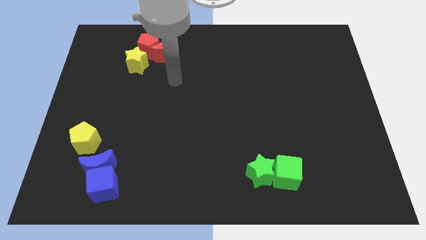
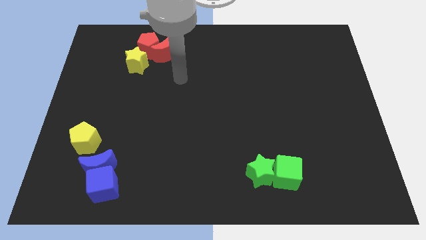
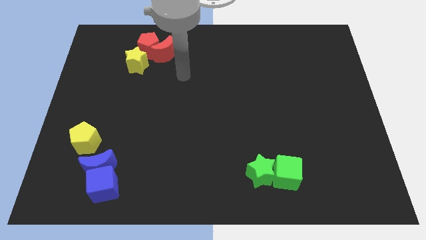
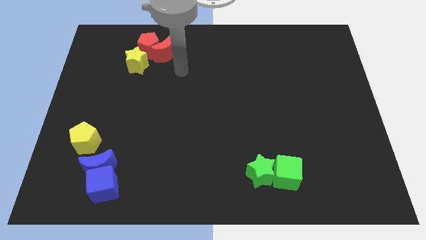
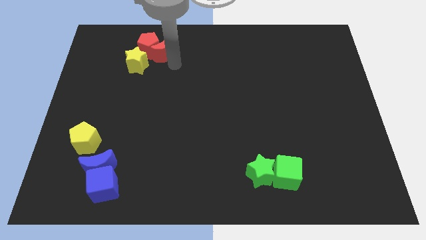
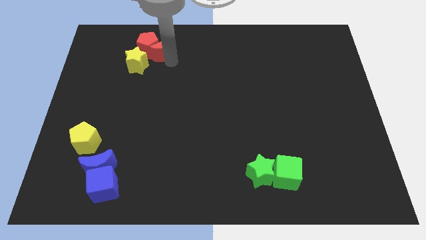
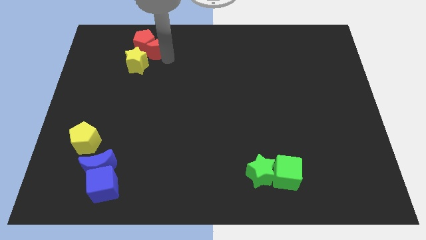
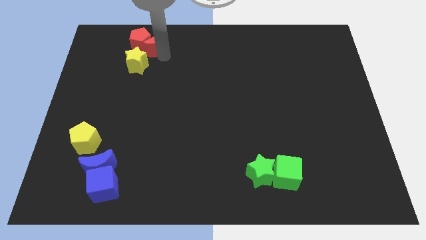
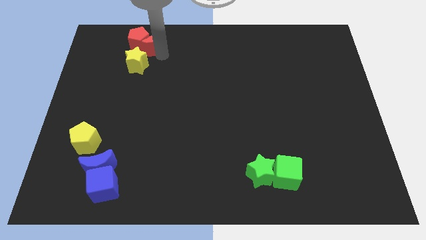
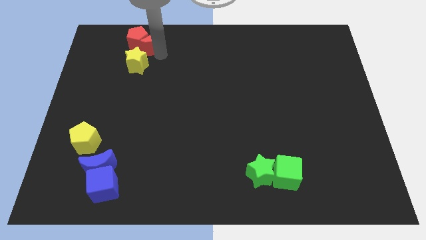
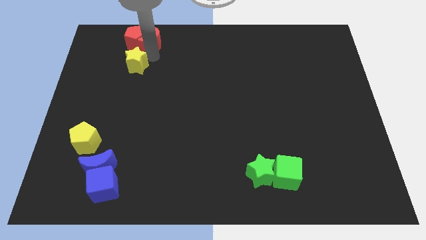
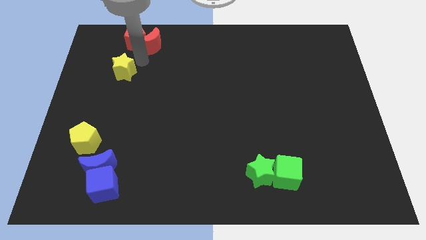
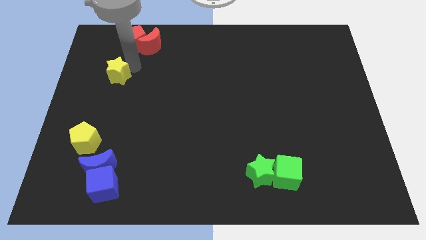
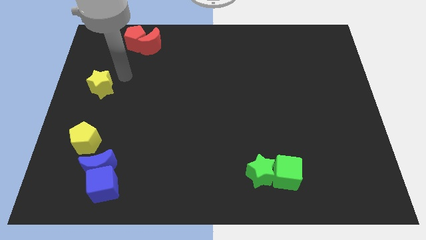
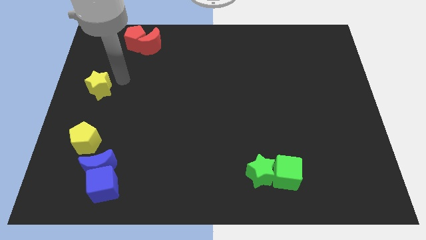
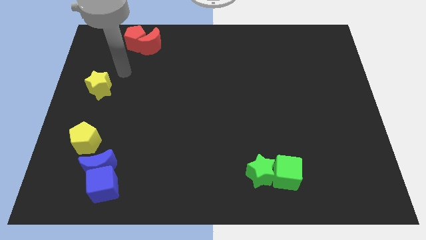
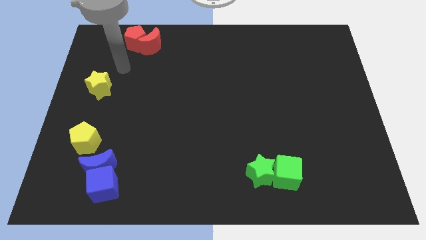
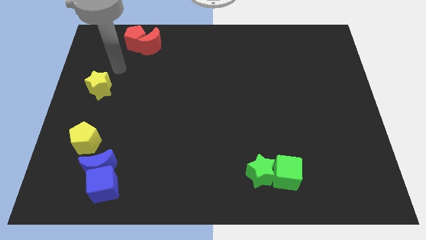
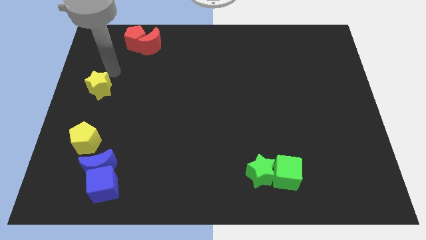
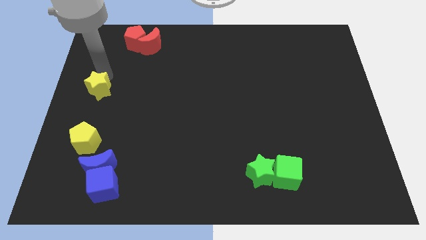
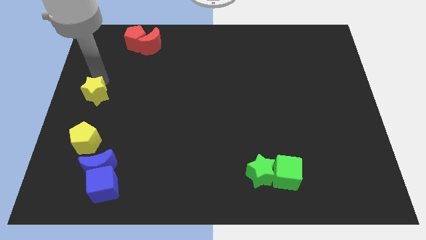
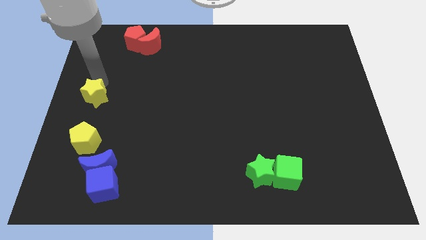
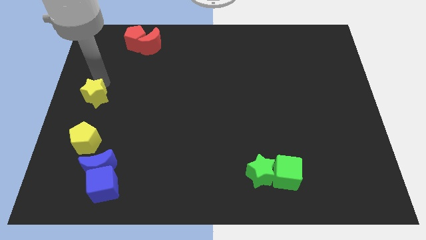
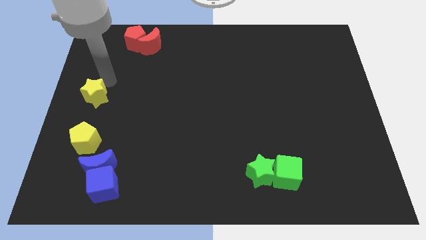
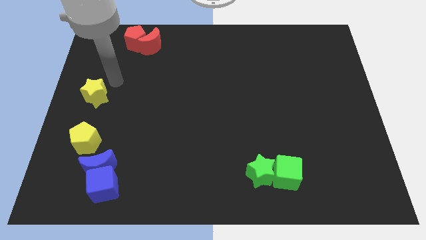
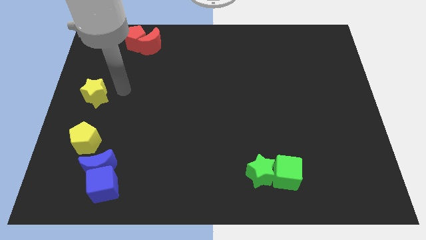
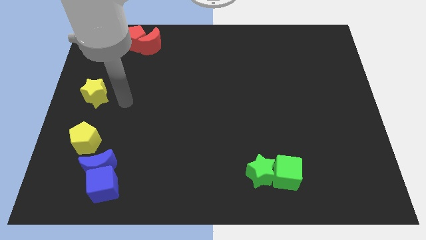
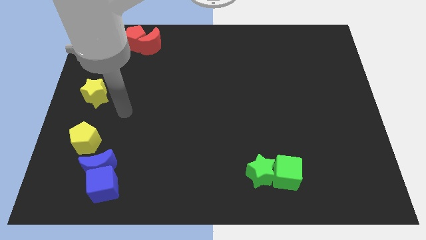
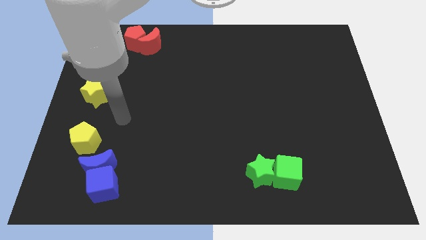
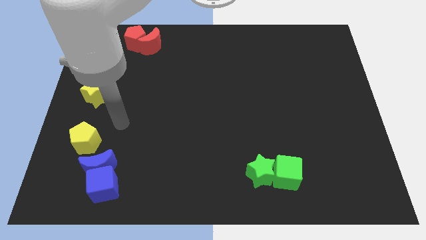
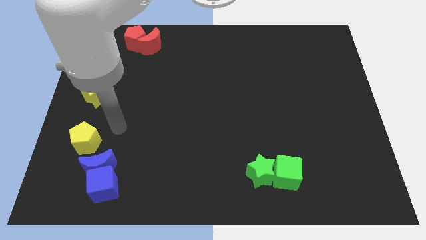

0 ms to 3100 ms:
slide the yellow star towards the left center of board

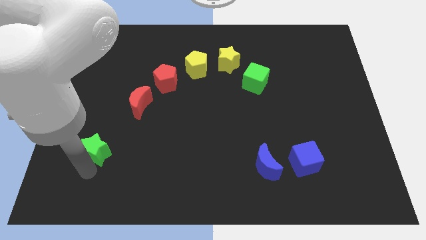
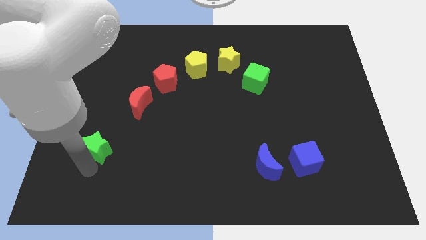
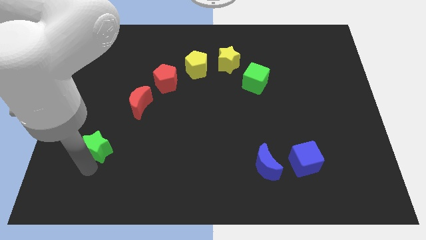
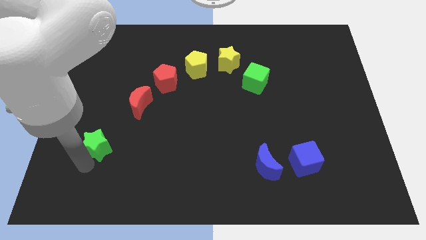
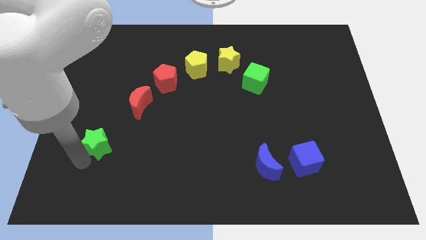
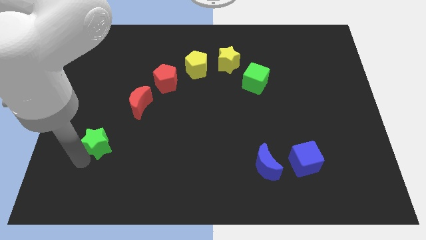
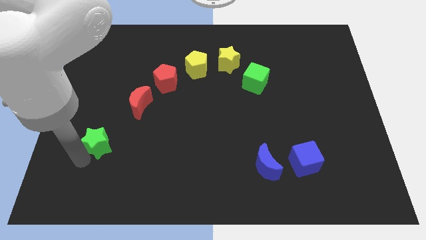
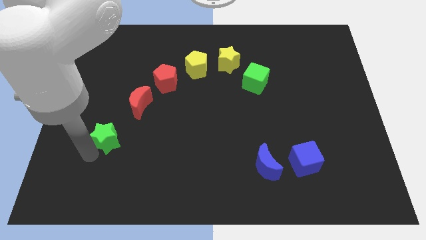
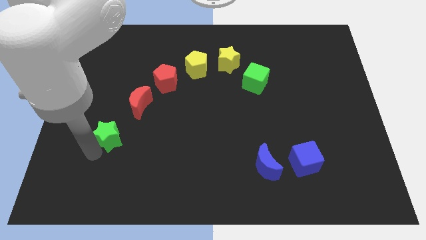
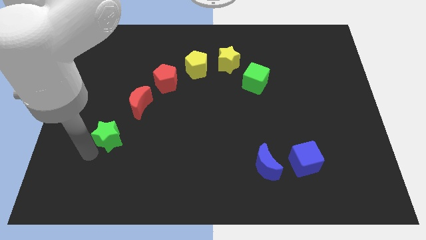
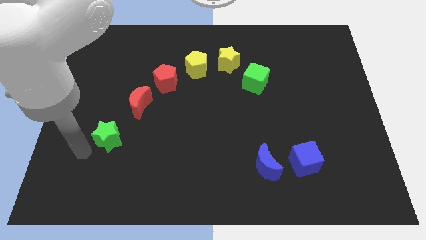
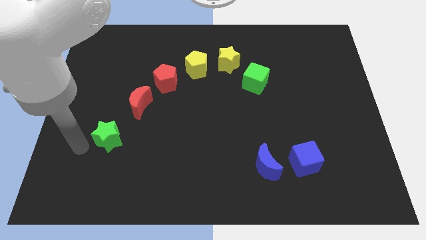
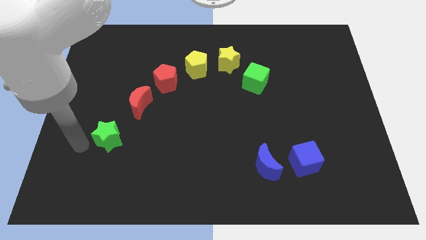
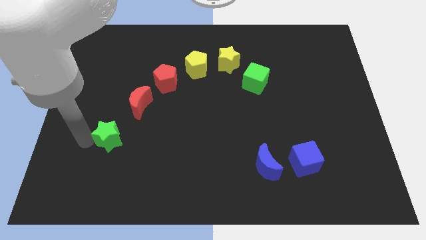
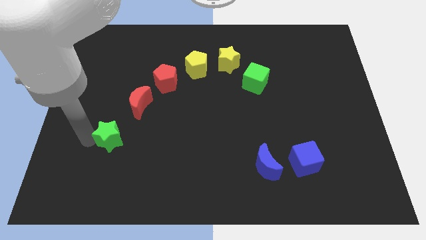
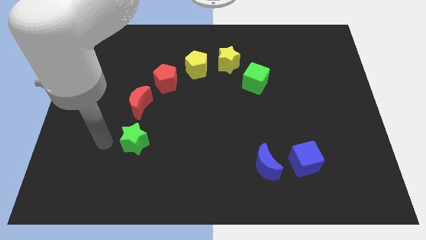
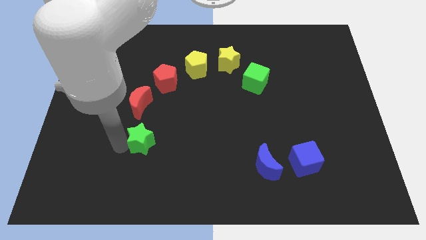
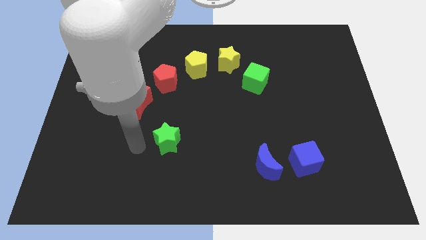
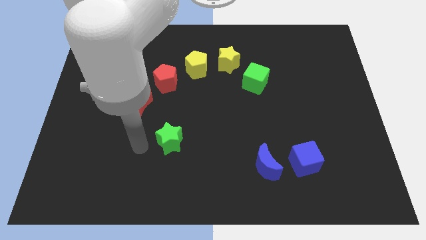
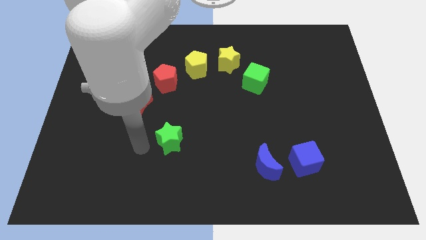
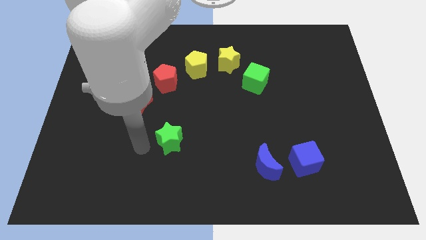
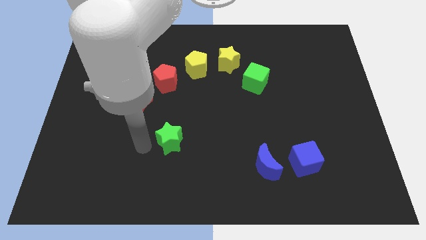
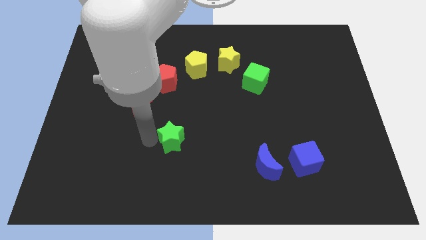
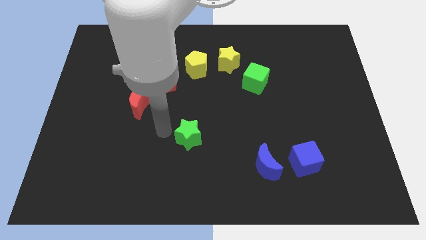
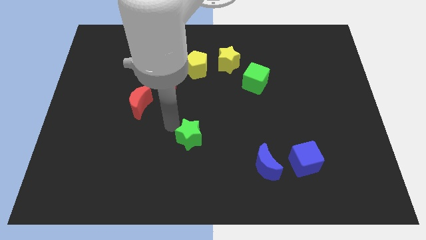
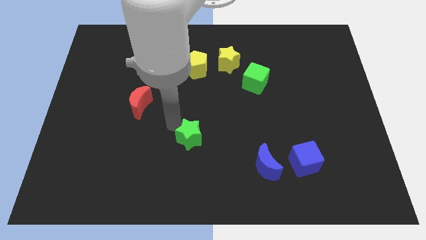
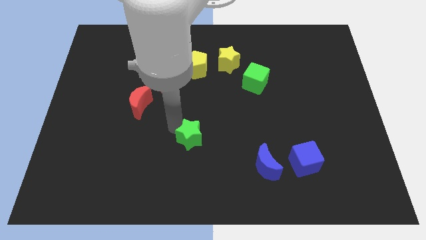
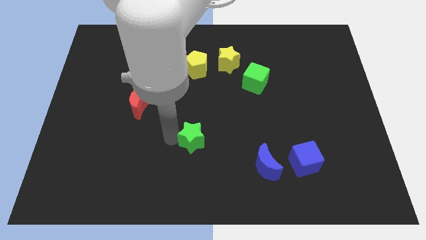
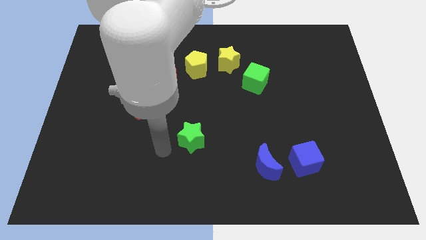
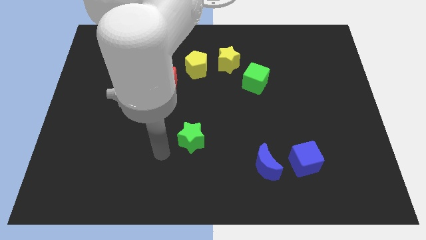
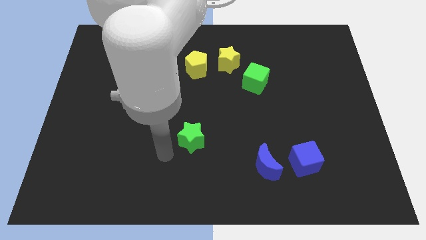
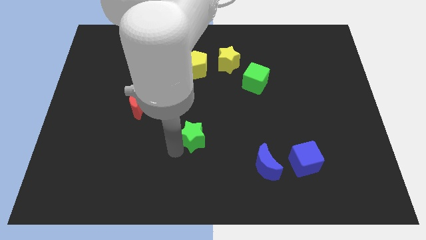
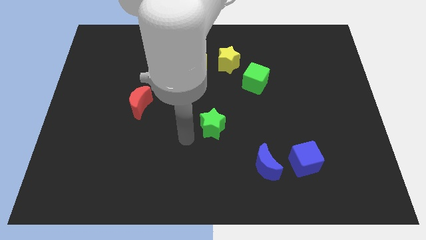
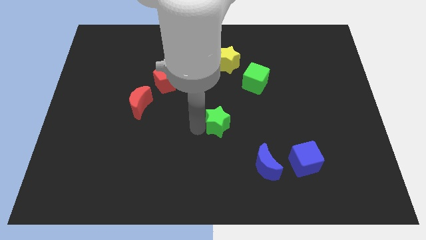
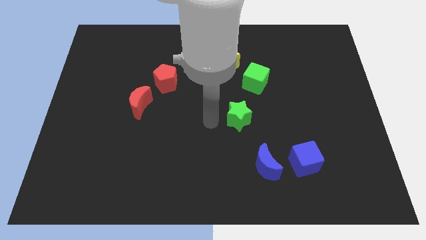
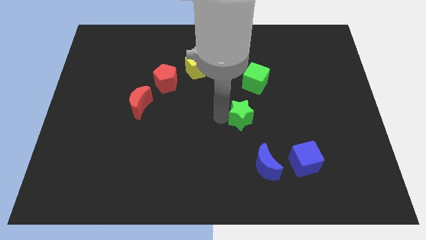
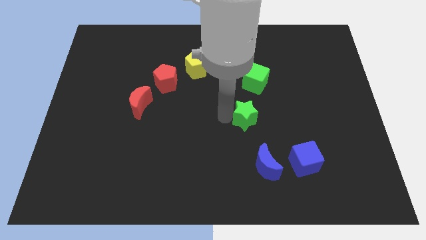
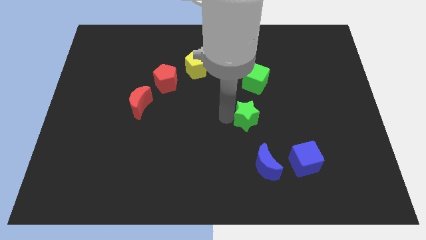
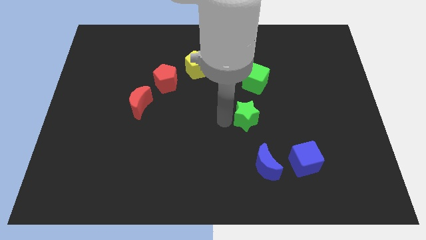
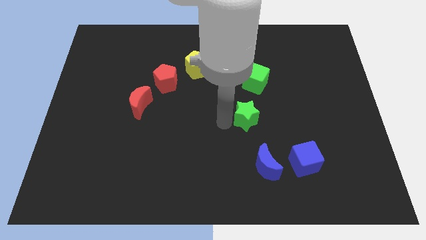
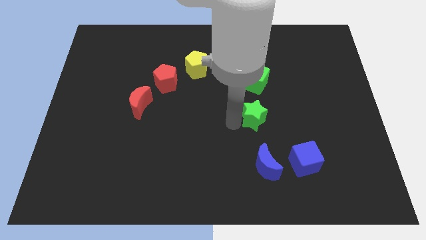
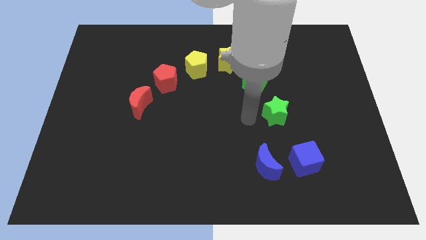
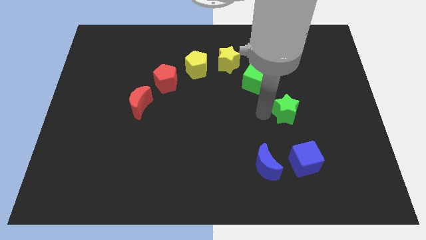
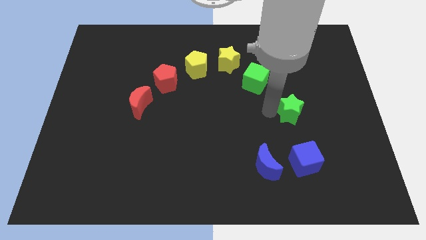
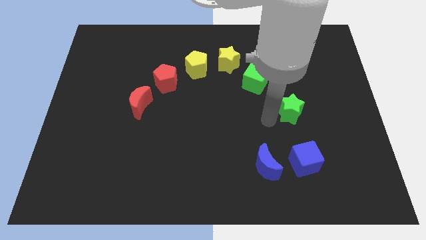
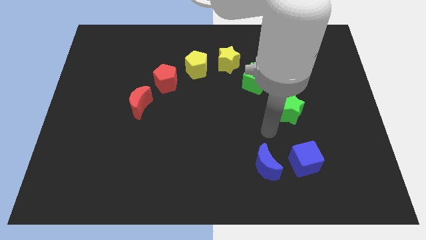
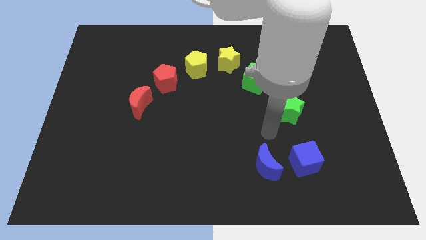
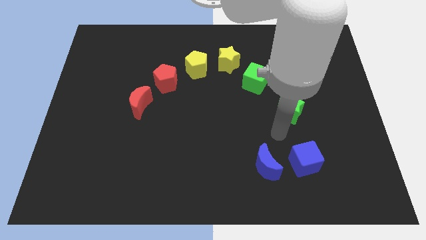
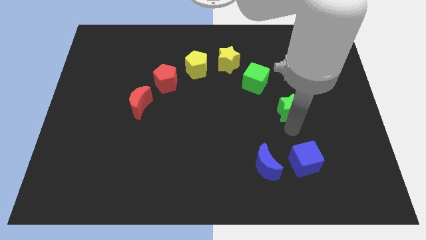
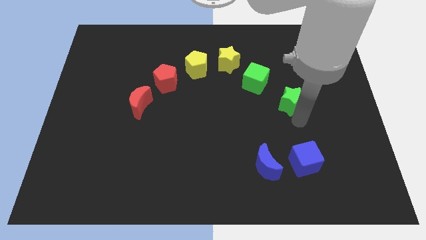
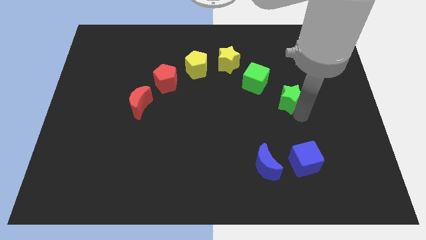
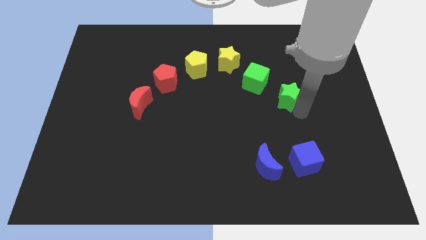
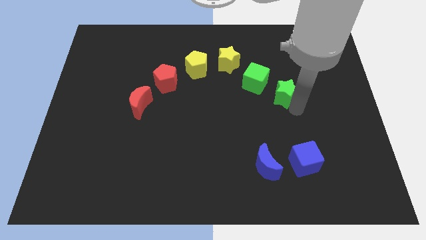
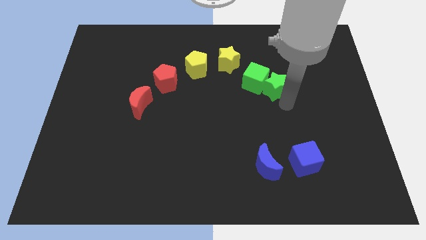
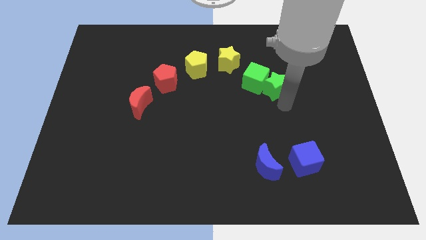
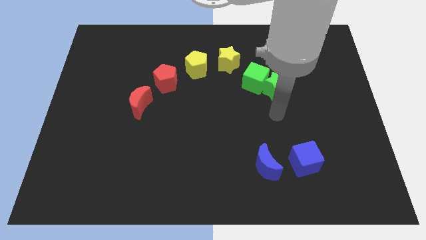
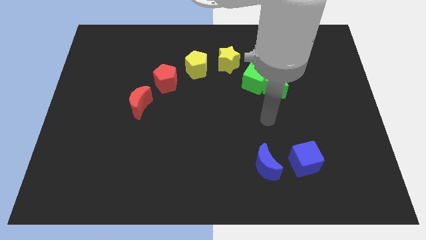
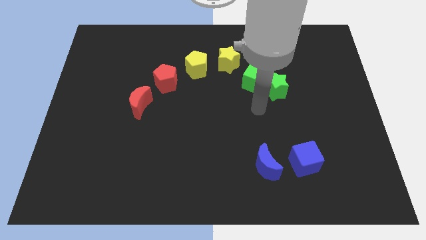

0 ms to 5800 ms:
move the green star close to green cube
